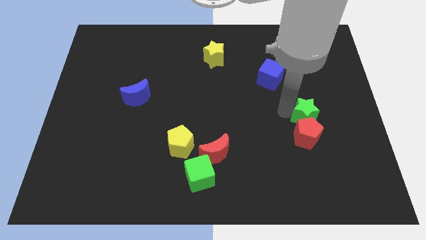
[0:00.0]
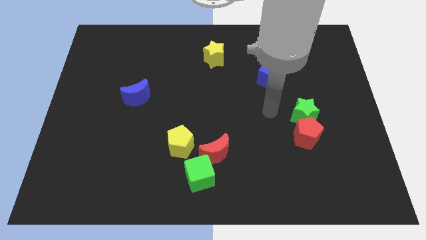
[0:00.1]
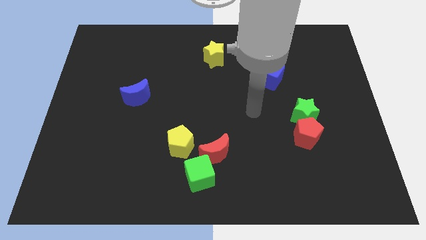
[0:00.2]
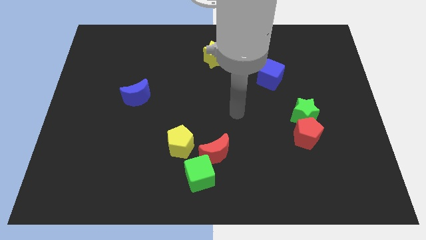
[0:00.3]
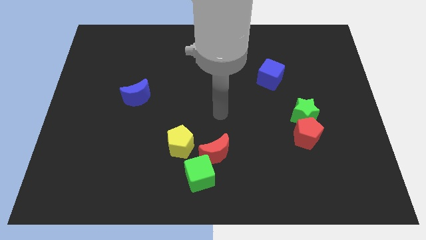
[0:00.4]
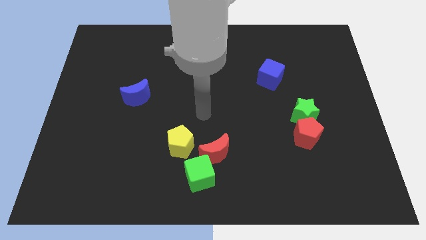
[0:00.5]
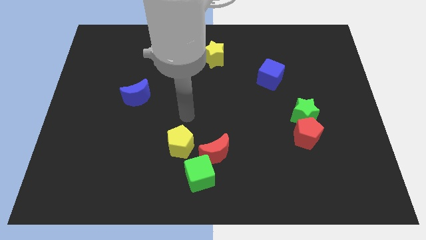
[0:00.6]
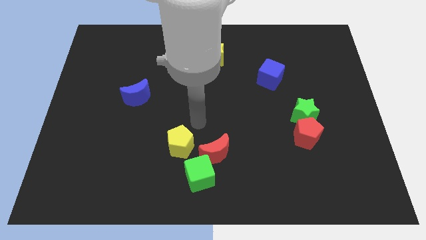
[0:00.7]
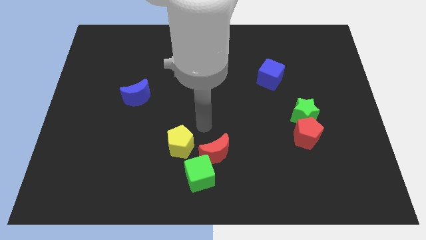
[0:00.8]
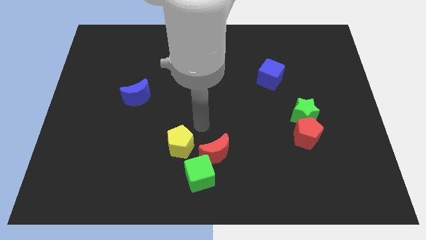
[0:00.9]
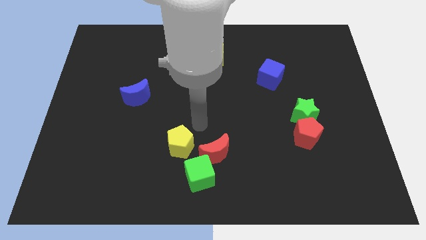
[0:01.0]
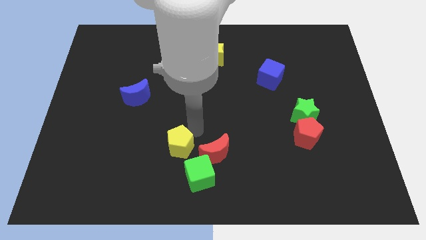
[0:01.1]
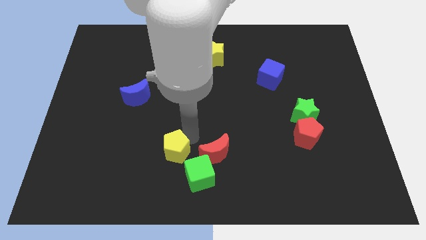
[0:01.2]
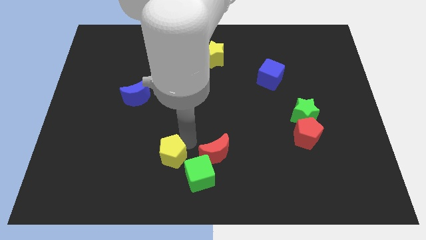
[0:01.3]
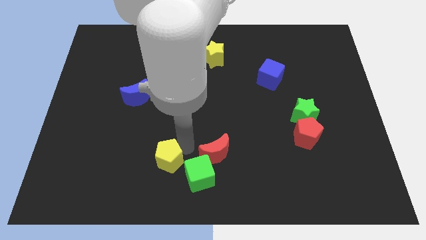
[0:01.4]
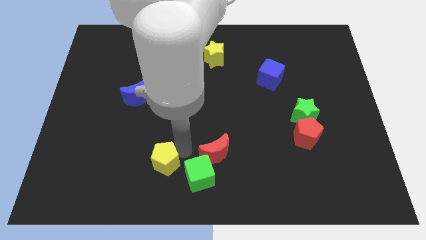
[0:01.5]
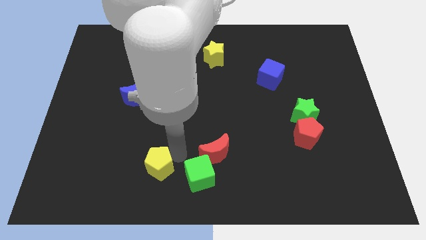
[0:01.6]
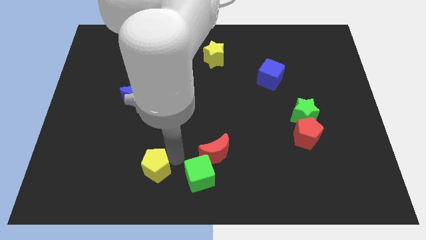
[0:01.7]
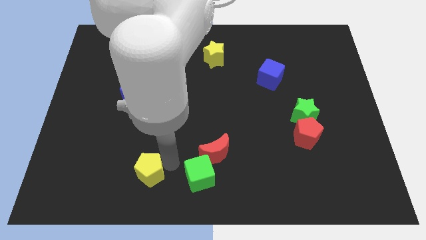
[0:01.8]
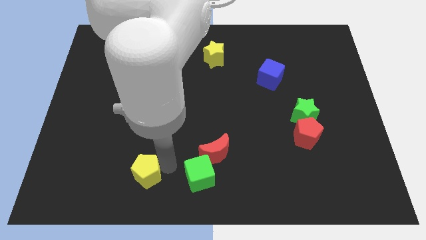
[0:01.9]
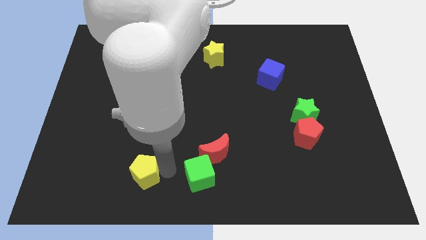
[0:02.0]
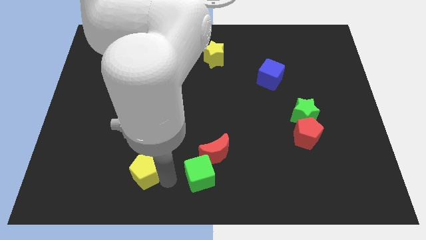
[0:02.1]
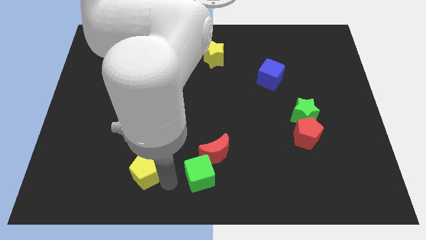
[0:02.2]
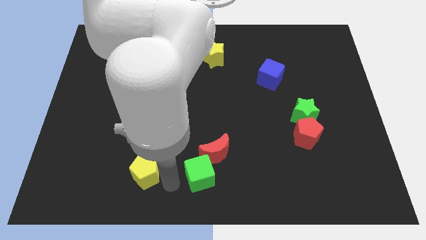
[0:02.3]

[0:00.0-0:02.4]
move the yellow pentagon towards bottom

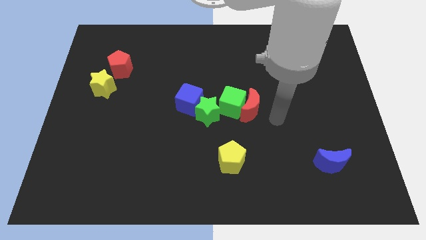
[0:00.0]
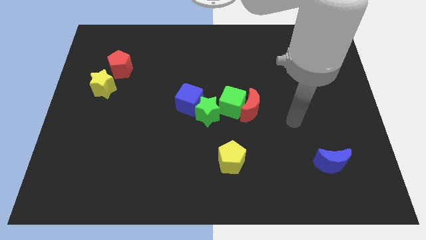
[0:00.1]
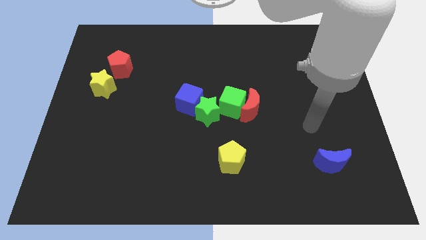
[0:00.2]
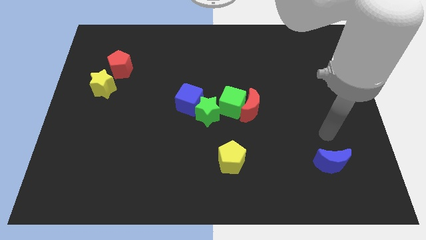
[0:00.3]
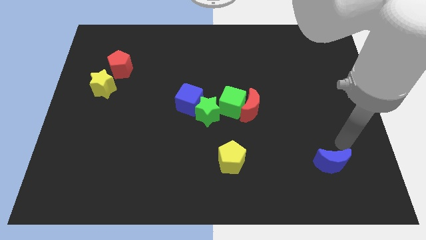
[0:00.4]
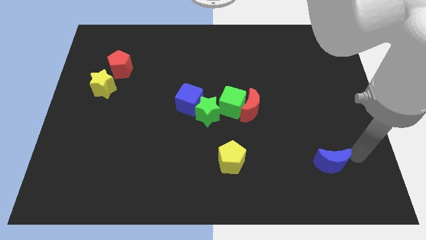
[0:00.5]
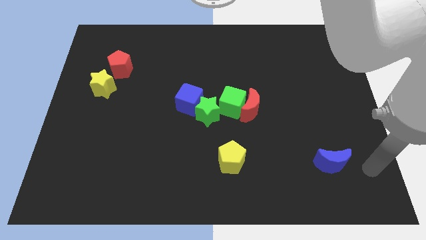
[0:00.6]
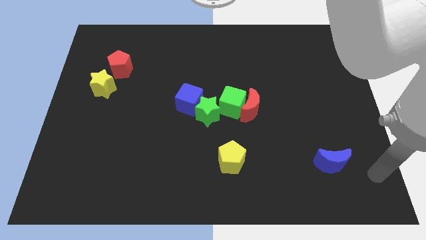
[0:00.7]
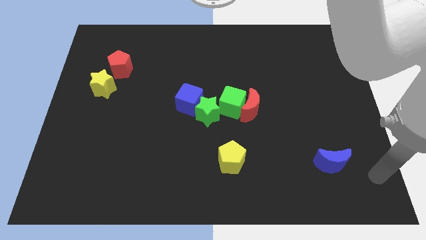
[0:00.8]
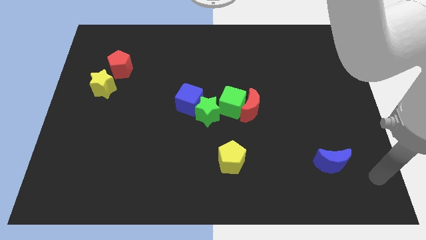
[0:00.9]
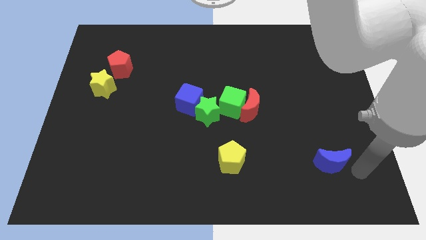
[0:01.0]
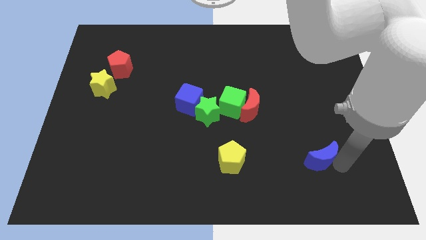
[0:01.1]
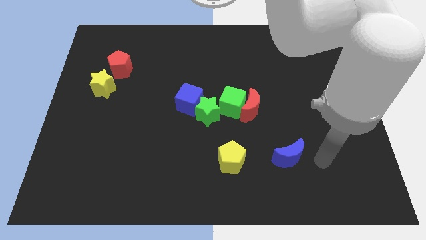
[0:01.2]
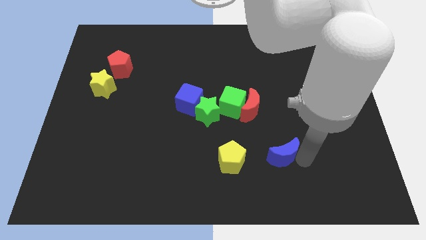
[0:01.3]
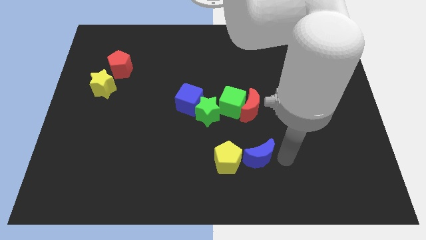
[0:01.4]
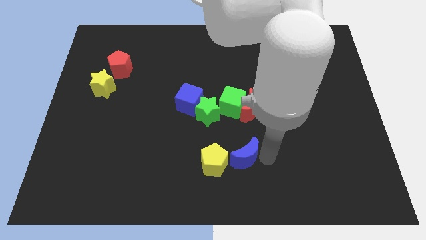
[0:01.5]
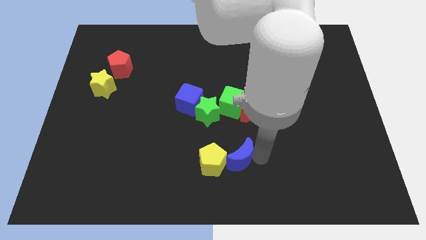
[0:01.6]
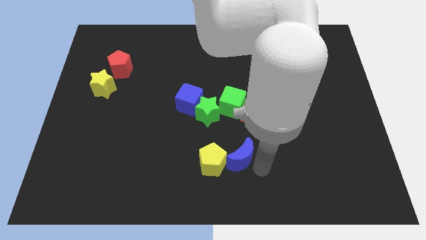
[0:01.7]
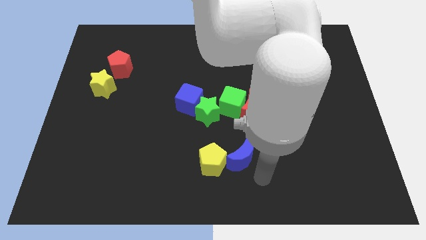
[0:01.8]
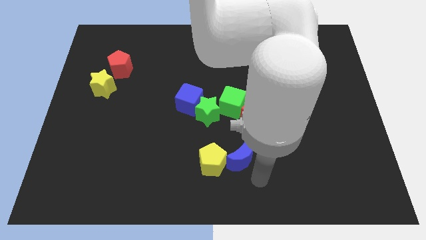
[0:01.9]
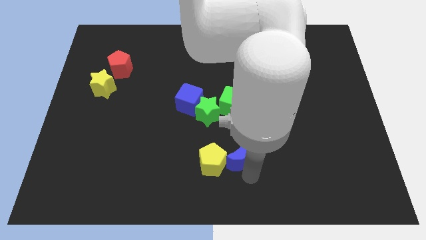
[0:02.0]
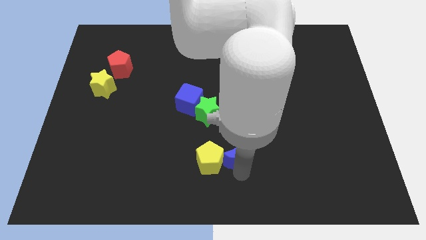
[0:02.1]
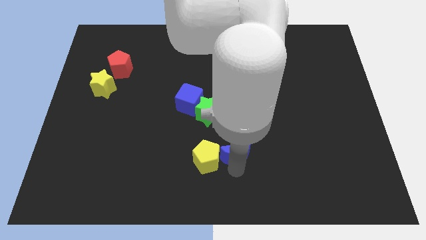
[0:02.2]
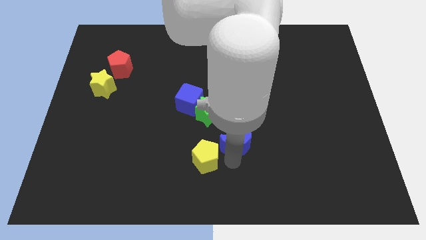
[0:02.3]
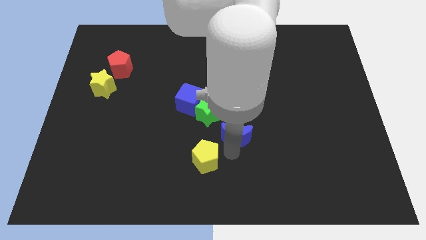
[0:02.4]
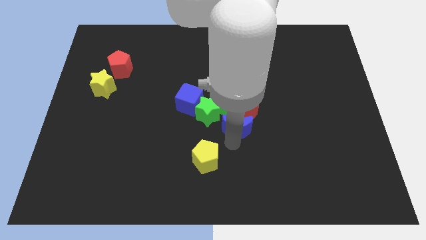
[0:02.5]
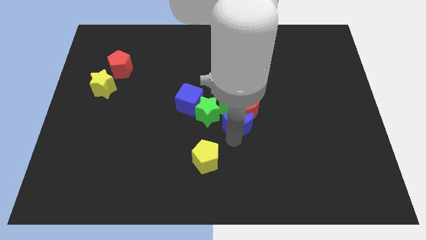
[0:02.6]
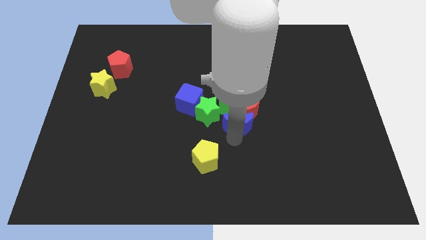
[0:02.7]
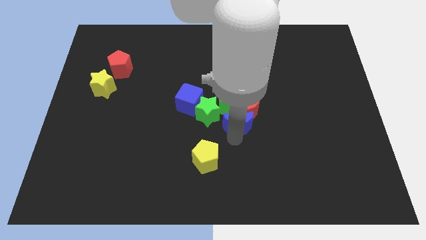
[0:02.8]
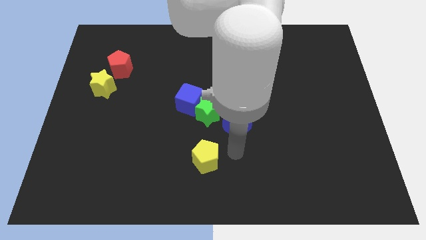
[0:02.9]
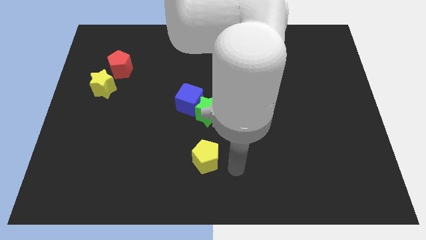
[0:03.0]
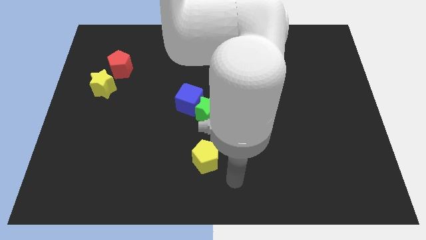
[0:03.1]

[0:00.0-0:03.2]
drag the blue crescent near to the red crescent

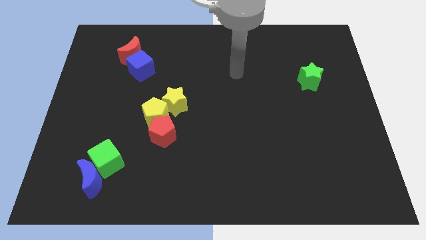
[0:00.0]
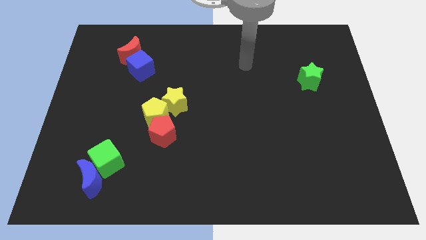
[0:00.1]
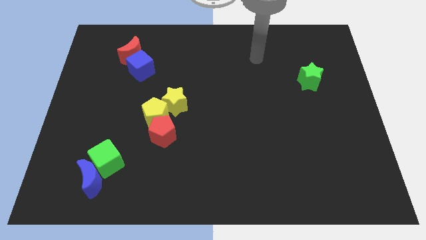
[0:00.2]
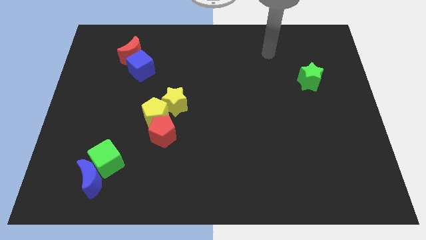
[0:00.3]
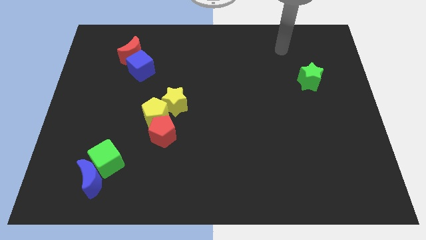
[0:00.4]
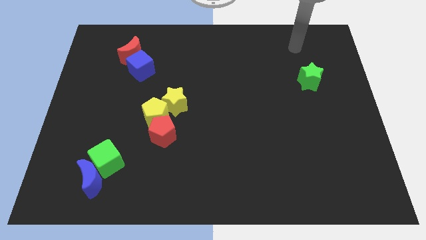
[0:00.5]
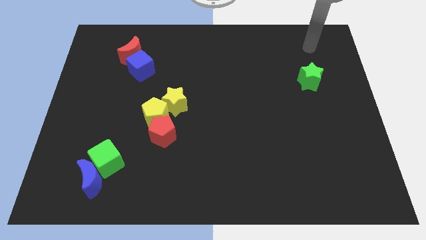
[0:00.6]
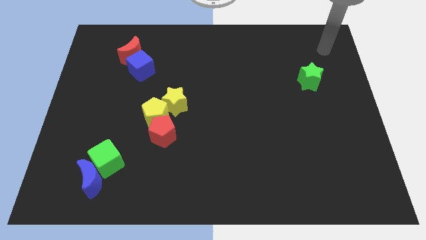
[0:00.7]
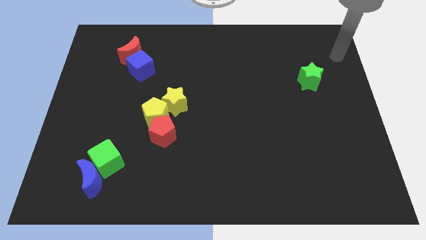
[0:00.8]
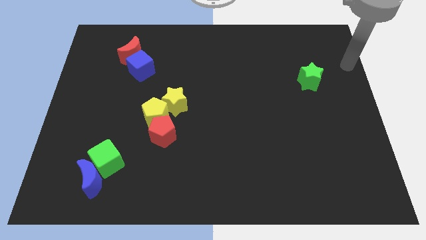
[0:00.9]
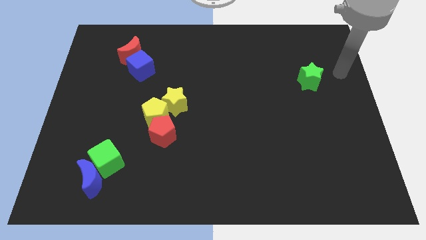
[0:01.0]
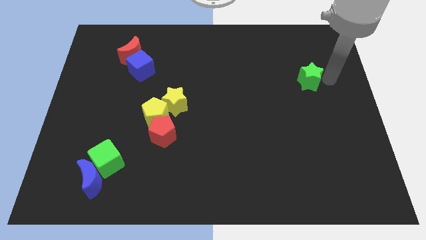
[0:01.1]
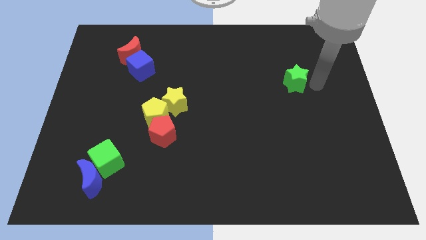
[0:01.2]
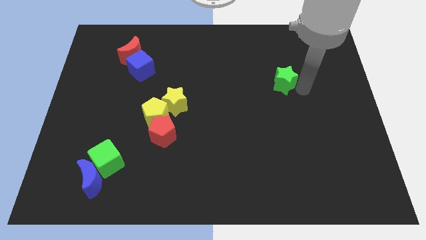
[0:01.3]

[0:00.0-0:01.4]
move arm towards the green star on the top right of the board

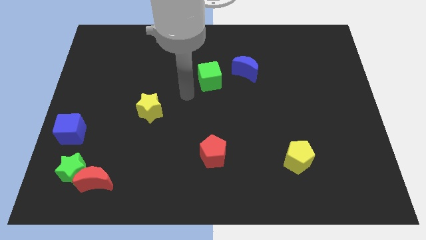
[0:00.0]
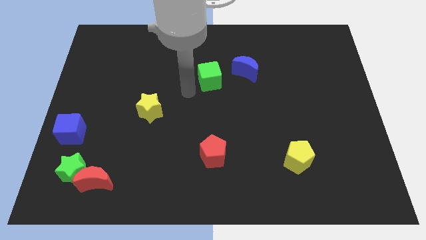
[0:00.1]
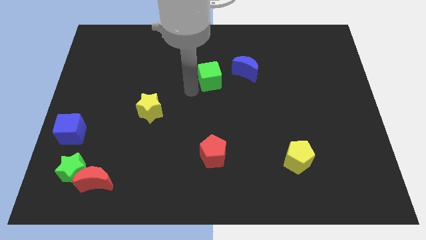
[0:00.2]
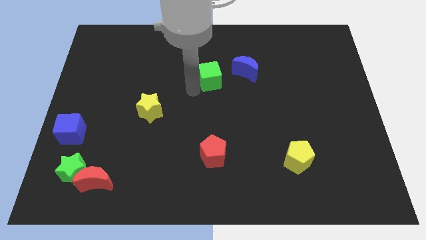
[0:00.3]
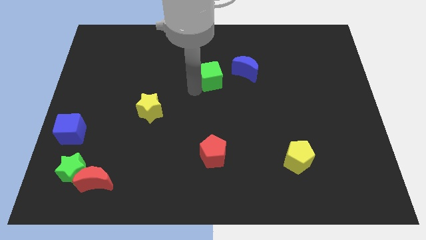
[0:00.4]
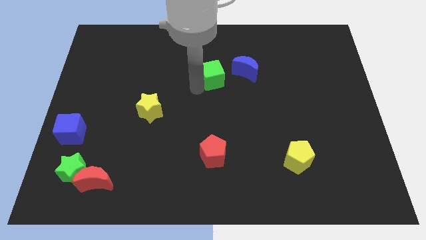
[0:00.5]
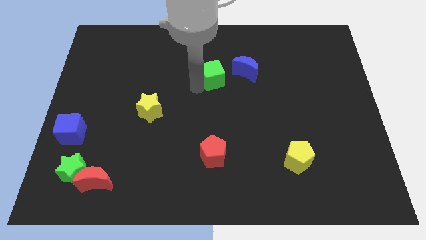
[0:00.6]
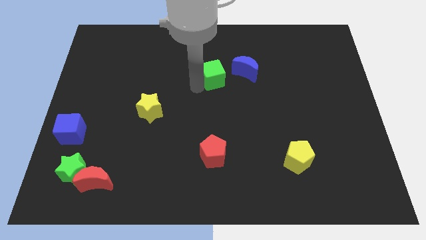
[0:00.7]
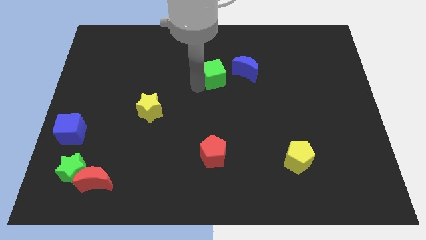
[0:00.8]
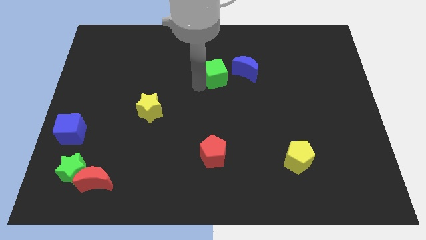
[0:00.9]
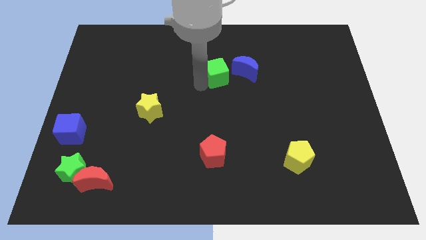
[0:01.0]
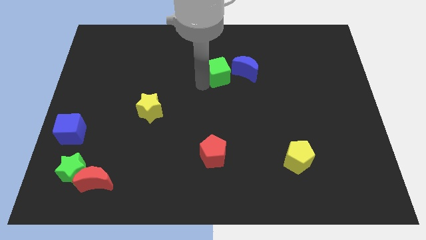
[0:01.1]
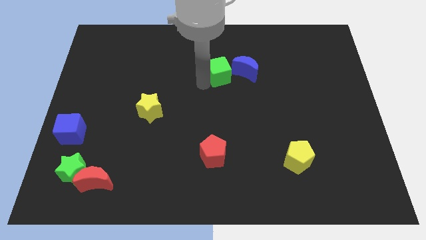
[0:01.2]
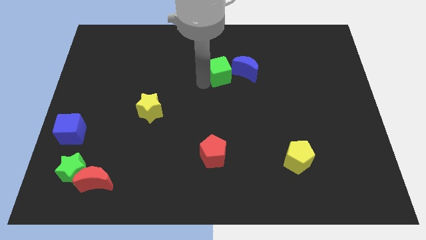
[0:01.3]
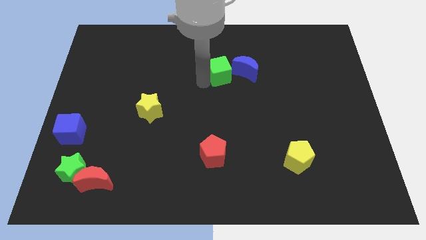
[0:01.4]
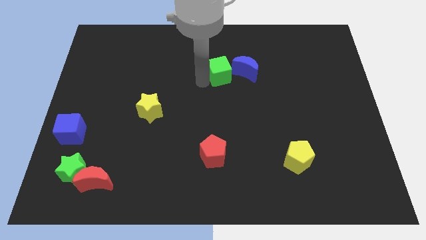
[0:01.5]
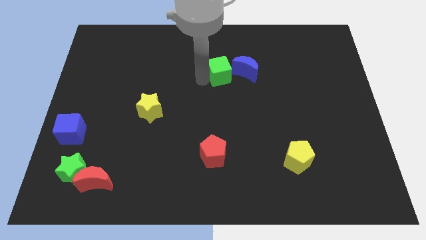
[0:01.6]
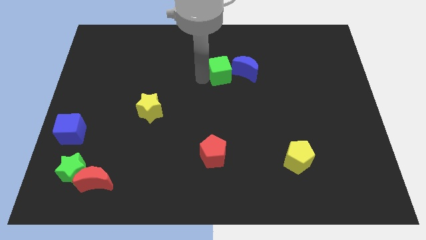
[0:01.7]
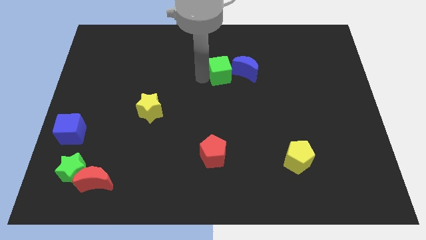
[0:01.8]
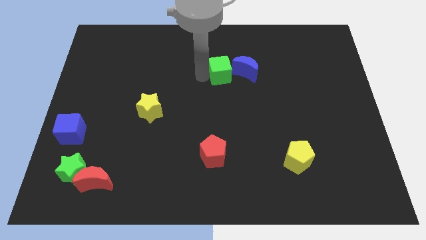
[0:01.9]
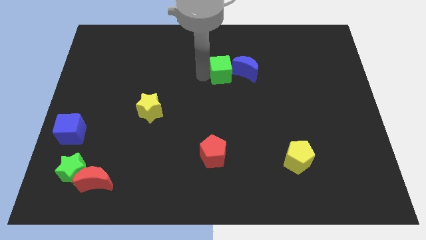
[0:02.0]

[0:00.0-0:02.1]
slide the green cube into the left side of the blue moon
